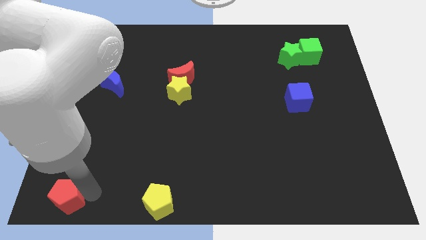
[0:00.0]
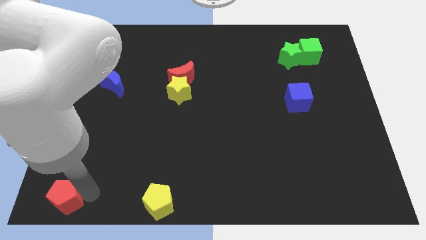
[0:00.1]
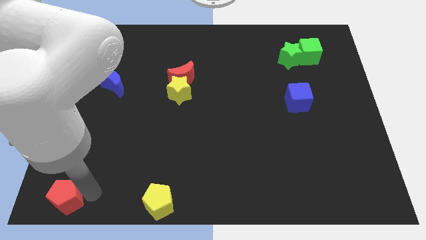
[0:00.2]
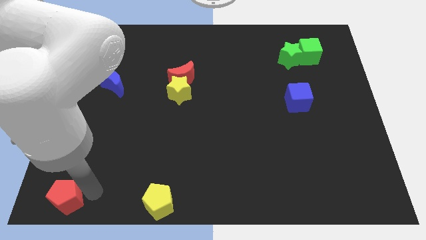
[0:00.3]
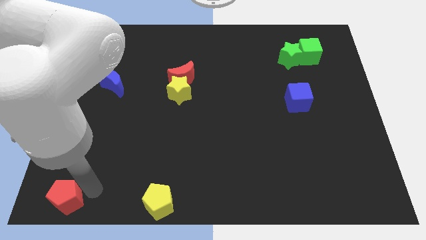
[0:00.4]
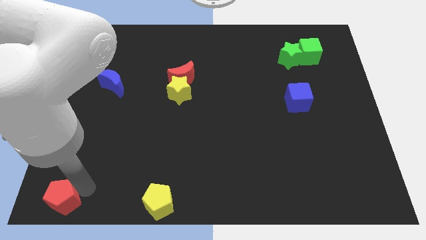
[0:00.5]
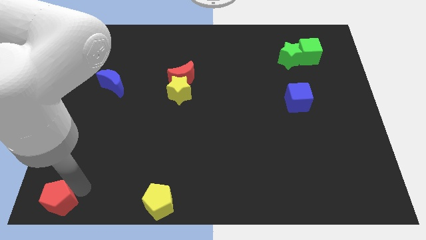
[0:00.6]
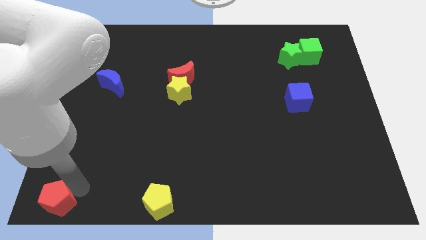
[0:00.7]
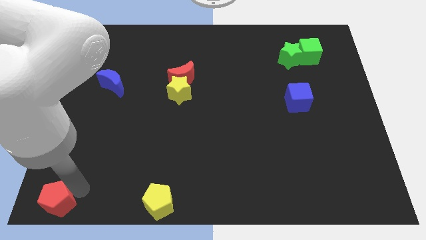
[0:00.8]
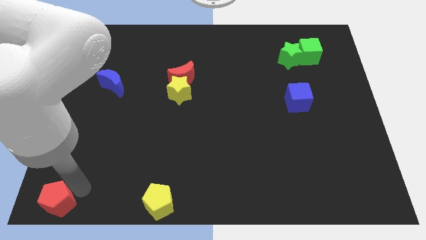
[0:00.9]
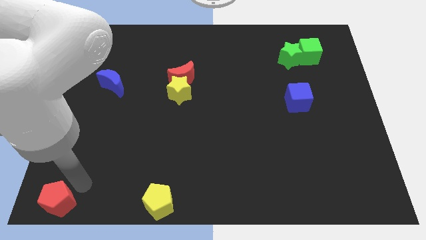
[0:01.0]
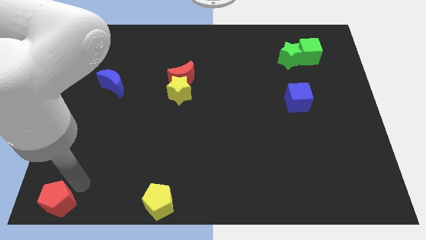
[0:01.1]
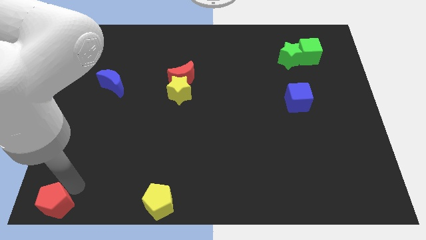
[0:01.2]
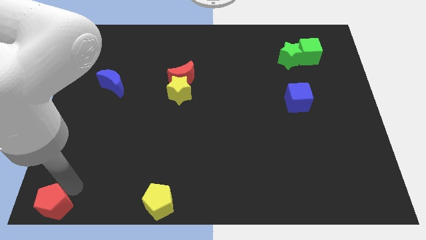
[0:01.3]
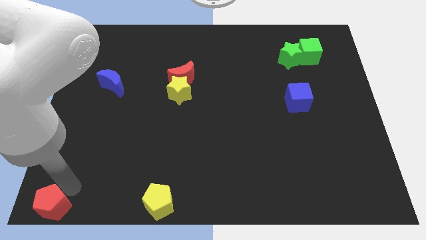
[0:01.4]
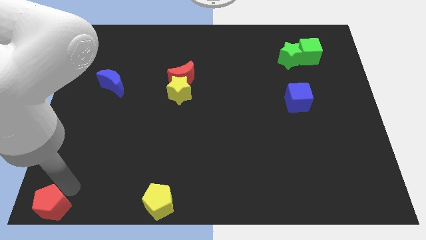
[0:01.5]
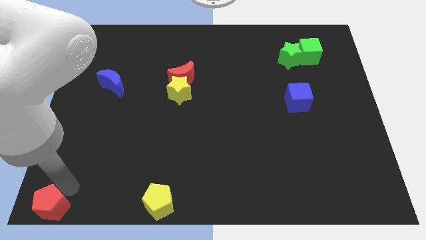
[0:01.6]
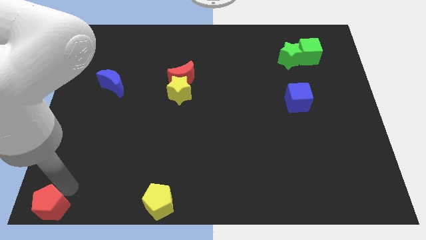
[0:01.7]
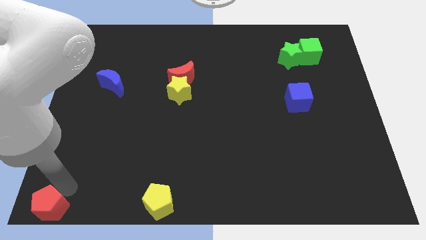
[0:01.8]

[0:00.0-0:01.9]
move the red pentagon to the bottom left corner

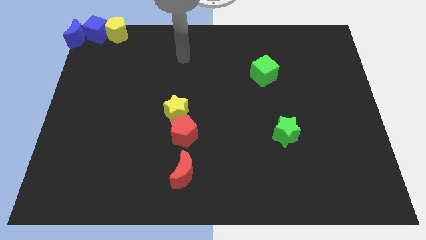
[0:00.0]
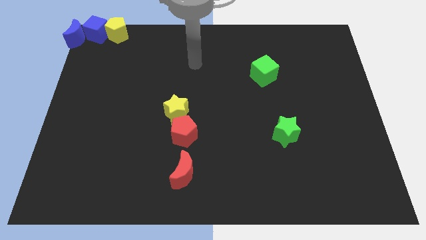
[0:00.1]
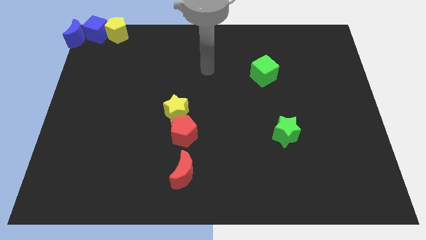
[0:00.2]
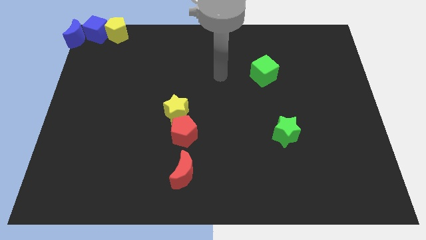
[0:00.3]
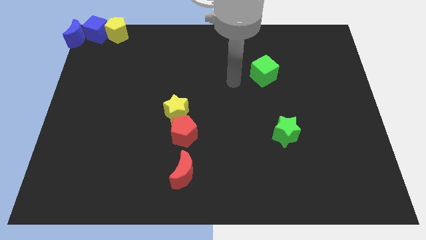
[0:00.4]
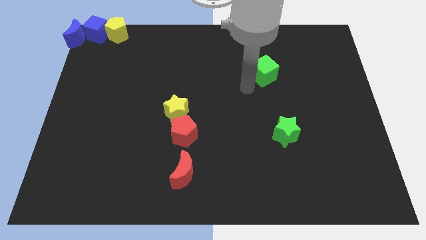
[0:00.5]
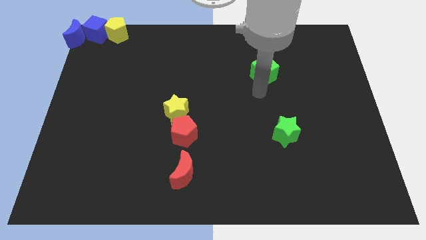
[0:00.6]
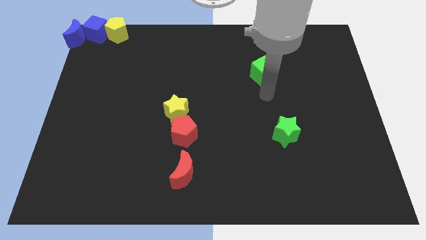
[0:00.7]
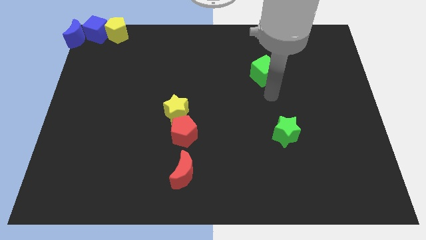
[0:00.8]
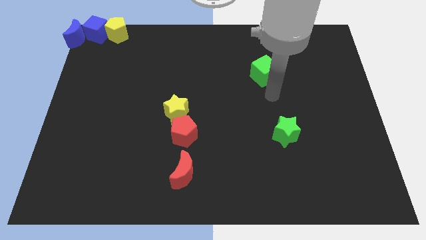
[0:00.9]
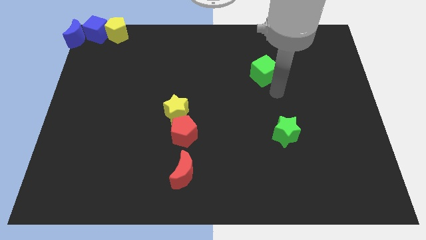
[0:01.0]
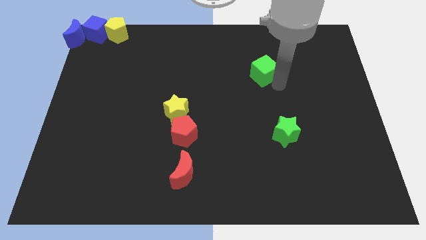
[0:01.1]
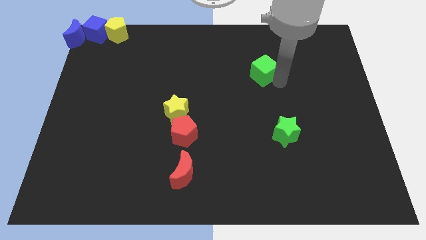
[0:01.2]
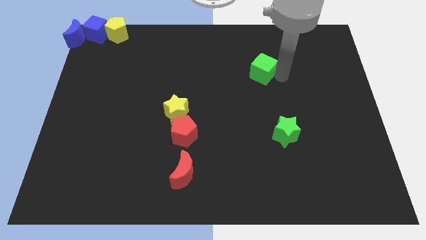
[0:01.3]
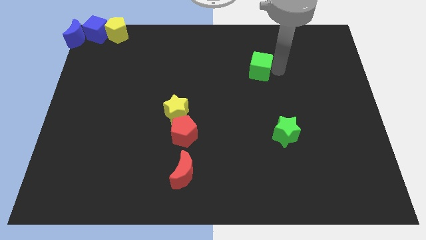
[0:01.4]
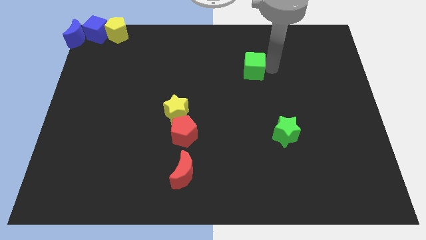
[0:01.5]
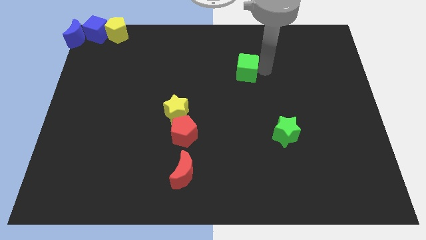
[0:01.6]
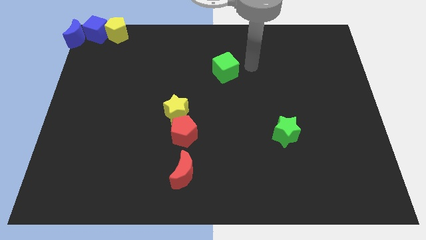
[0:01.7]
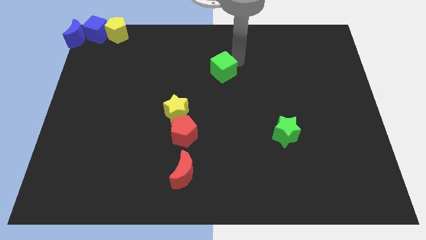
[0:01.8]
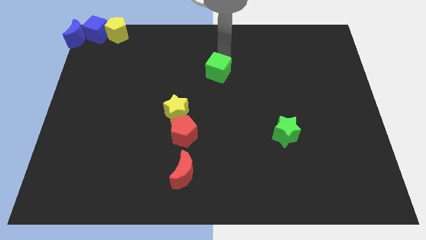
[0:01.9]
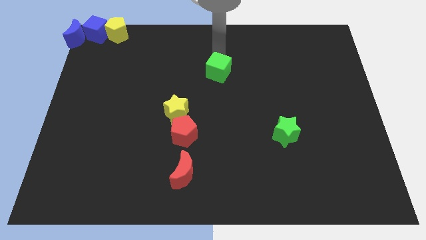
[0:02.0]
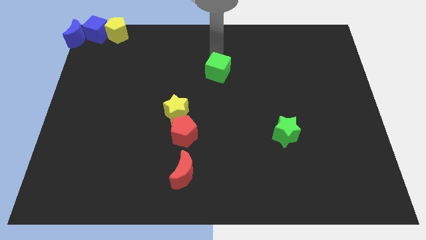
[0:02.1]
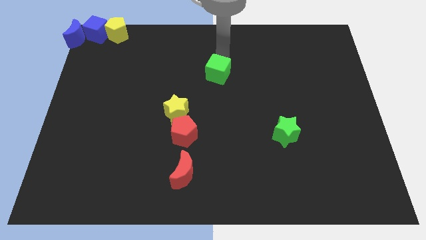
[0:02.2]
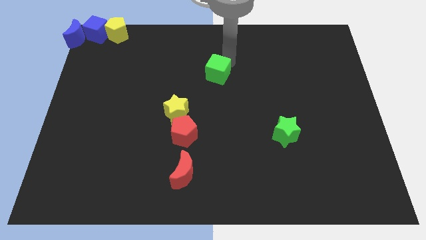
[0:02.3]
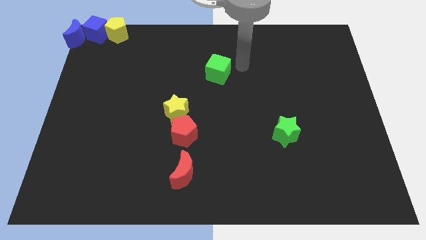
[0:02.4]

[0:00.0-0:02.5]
push the green cube towards the center of the board

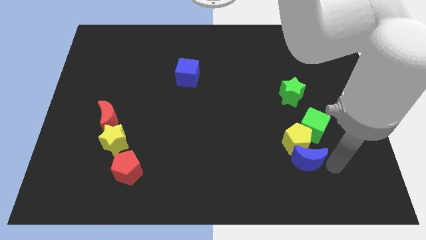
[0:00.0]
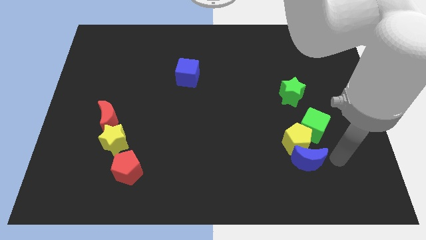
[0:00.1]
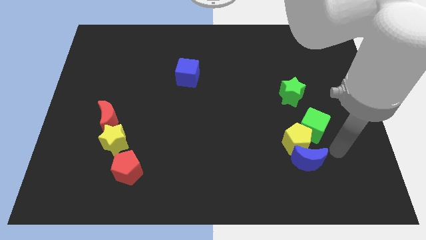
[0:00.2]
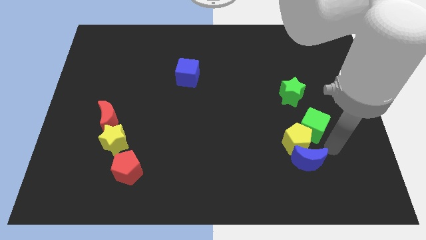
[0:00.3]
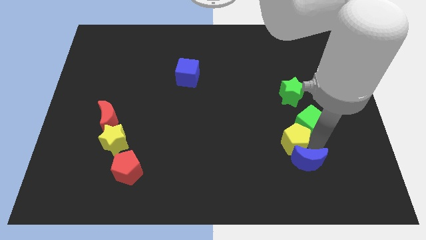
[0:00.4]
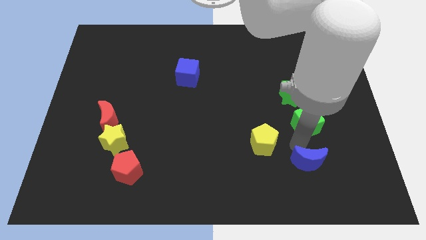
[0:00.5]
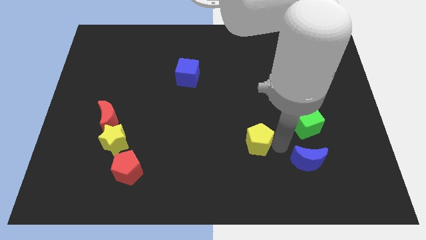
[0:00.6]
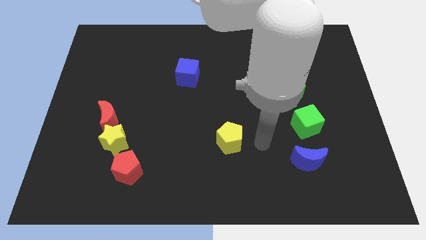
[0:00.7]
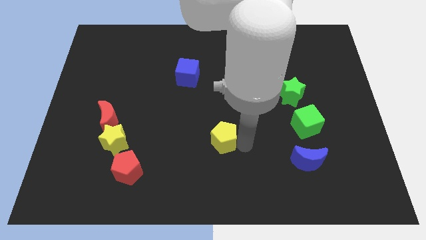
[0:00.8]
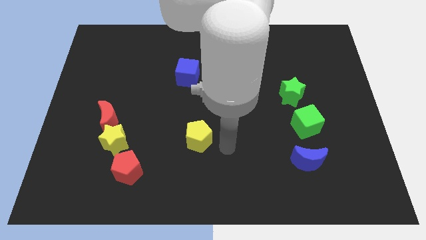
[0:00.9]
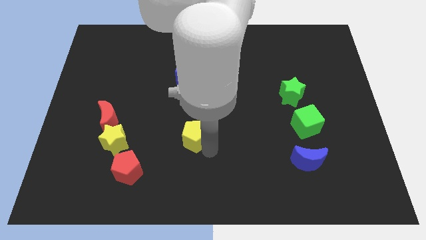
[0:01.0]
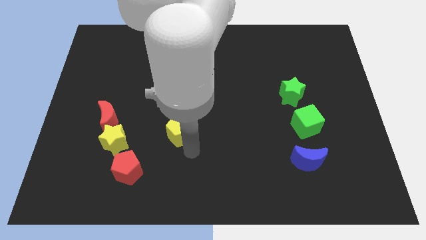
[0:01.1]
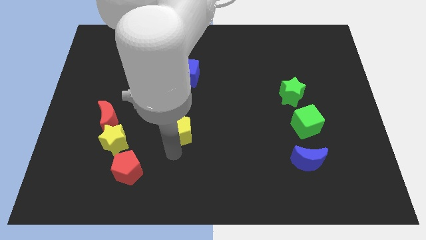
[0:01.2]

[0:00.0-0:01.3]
separate the yellow pentagon from the green cube and blue crescent

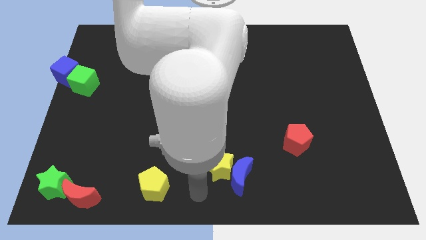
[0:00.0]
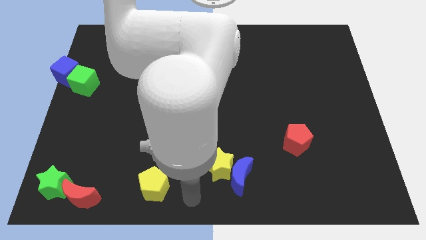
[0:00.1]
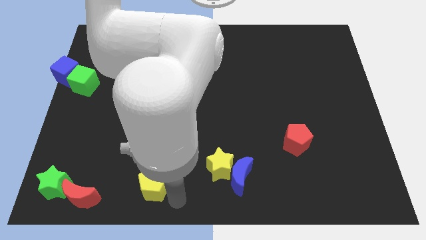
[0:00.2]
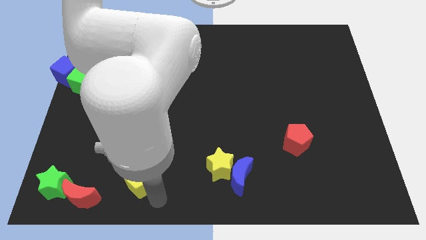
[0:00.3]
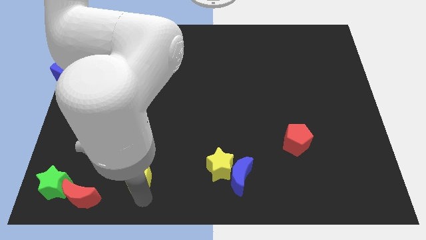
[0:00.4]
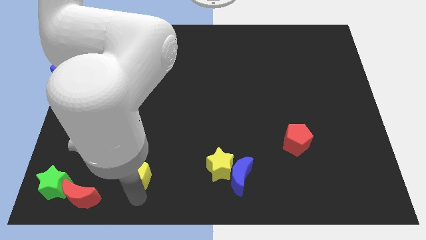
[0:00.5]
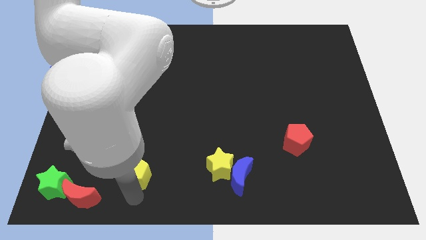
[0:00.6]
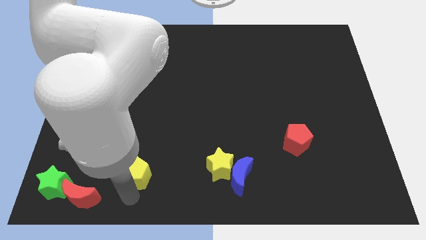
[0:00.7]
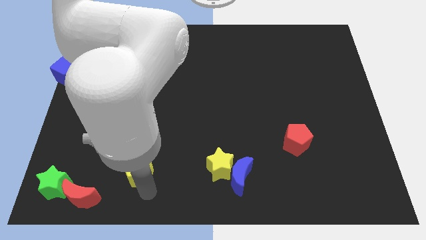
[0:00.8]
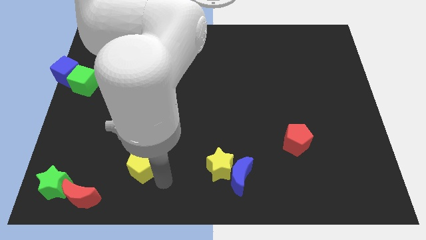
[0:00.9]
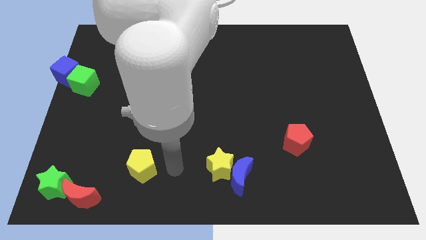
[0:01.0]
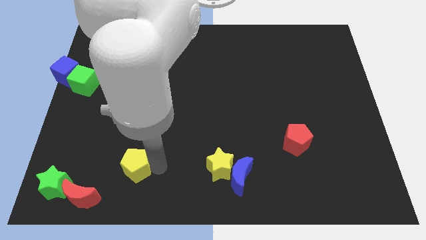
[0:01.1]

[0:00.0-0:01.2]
push the yellow pentagon parallel to the left of the yellow star

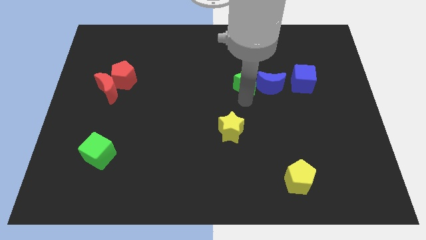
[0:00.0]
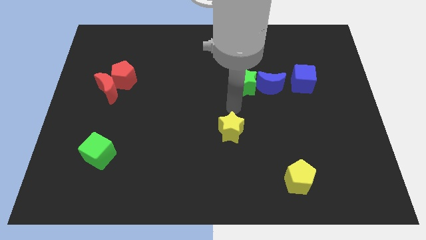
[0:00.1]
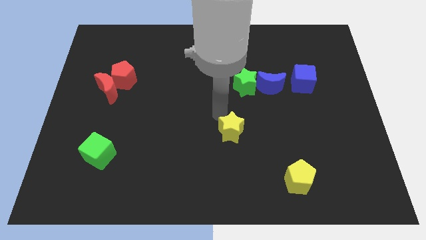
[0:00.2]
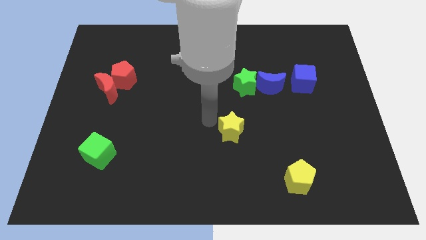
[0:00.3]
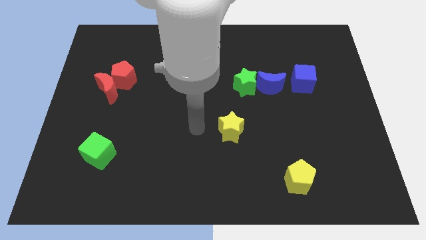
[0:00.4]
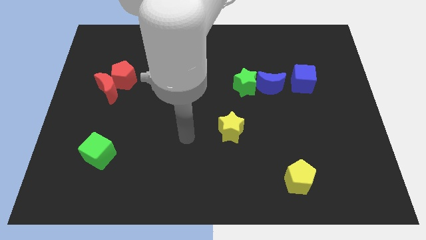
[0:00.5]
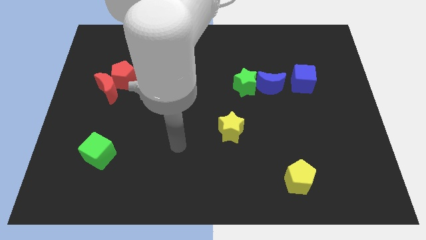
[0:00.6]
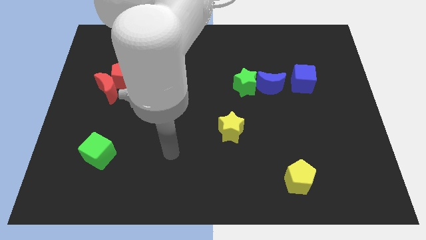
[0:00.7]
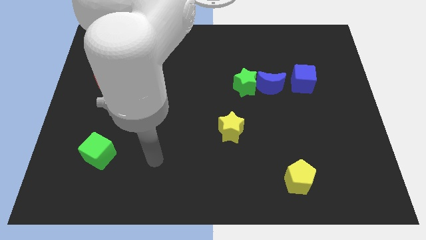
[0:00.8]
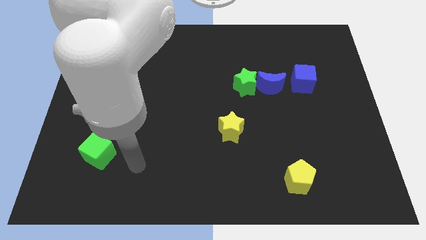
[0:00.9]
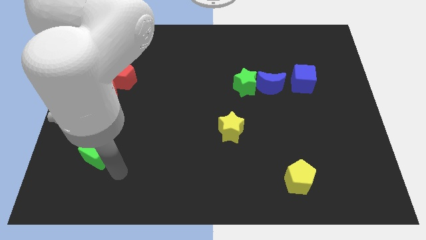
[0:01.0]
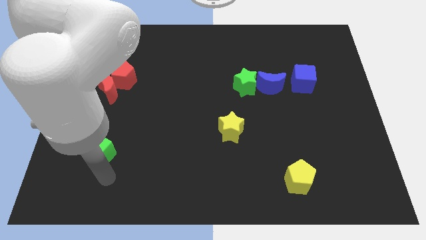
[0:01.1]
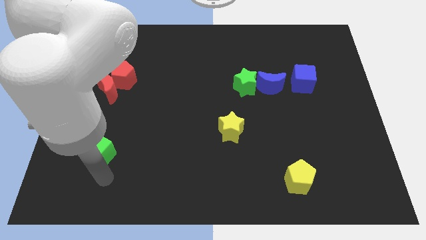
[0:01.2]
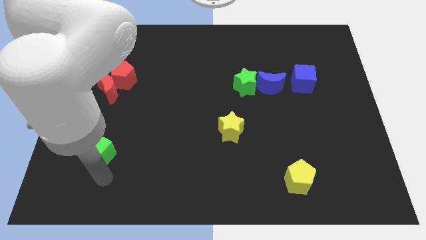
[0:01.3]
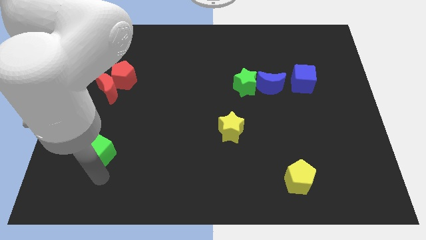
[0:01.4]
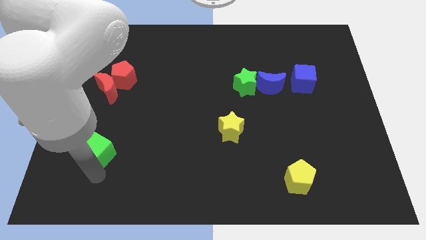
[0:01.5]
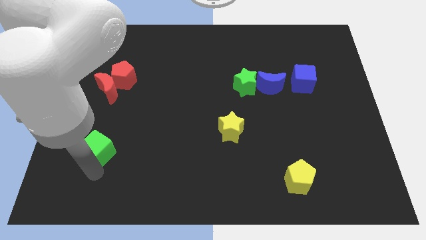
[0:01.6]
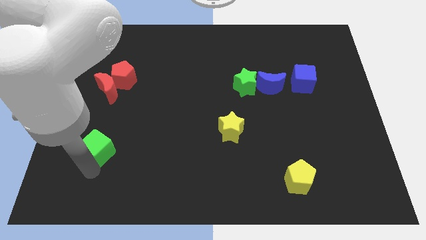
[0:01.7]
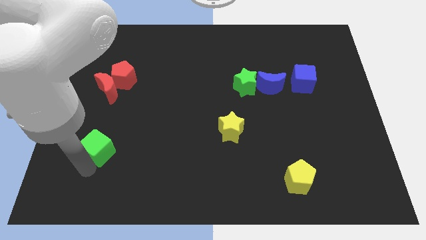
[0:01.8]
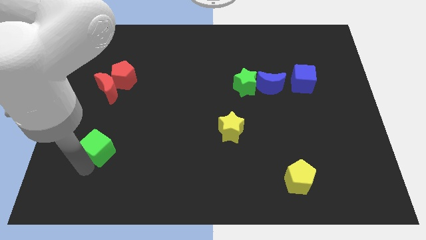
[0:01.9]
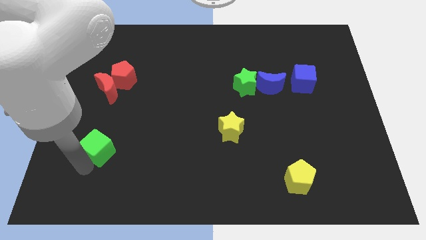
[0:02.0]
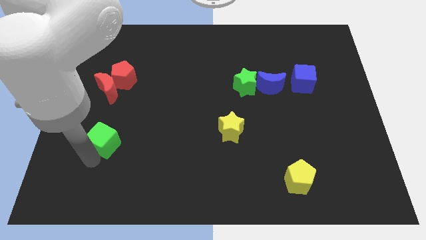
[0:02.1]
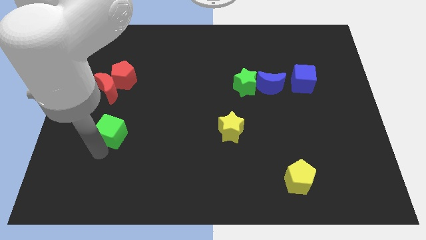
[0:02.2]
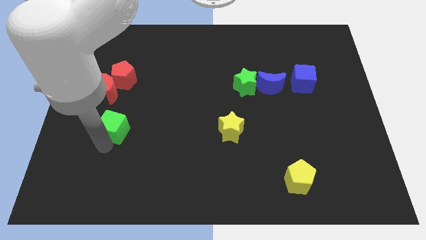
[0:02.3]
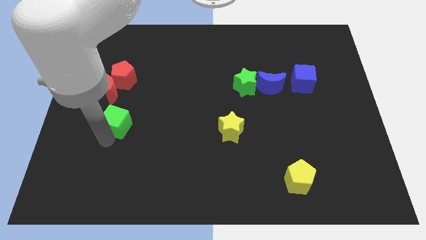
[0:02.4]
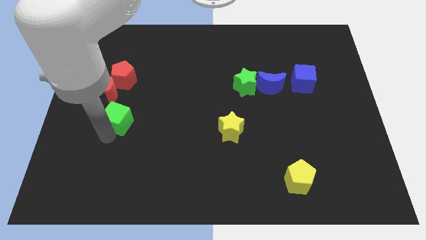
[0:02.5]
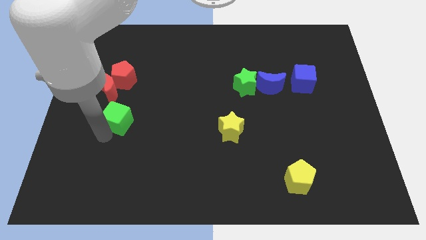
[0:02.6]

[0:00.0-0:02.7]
move green cube towards red moon
